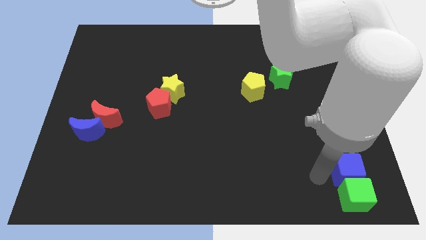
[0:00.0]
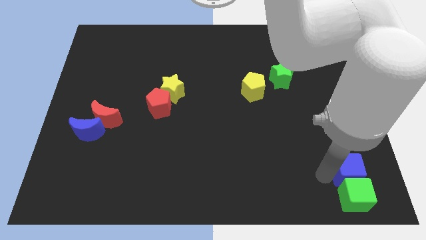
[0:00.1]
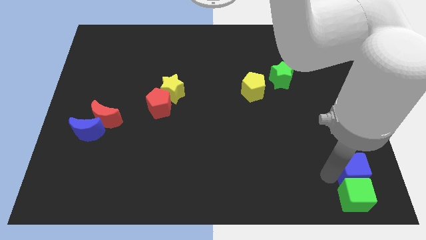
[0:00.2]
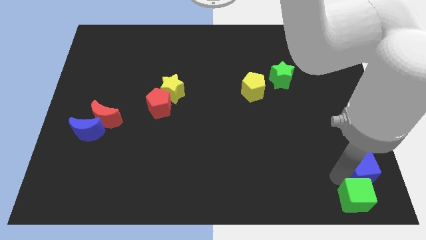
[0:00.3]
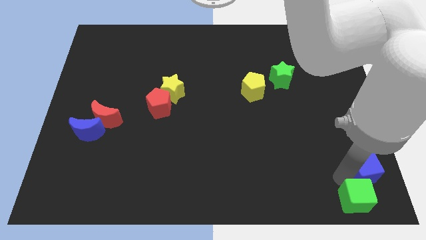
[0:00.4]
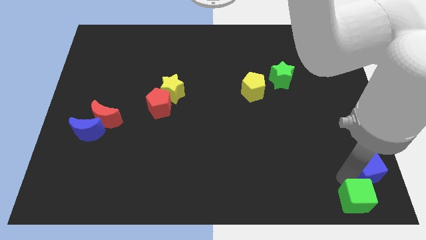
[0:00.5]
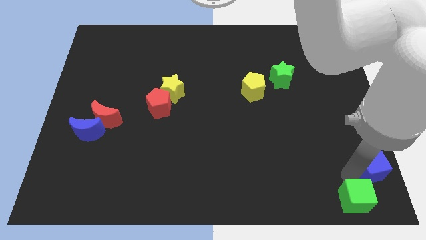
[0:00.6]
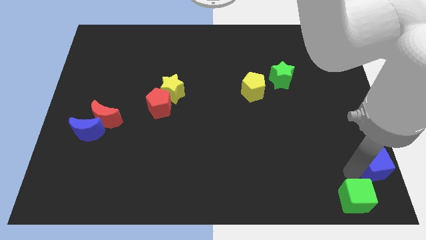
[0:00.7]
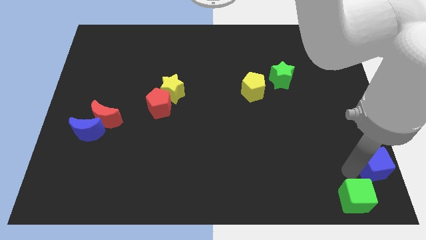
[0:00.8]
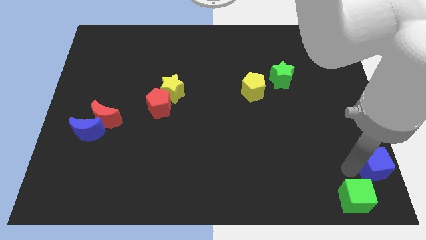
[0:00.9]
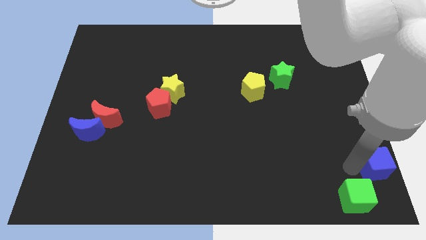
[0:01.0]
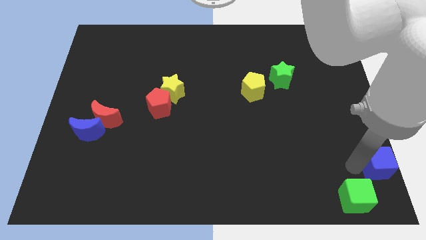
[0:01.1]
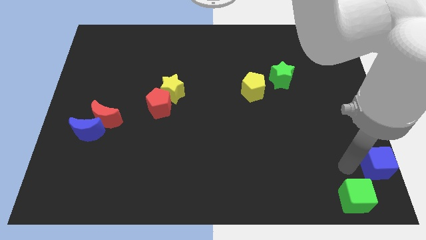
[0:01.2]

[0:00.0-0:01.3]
move blue cube to the right side of the board

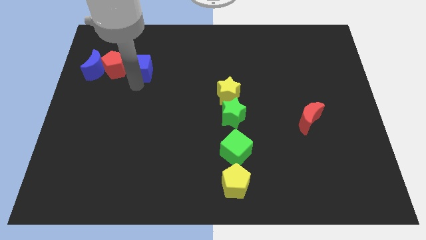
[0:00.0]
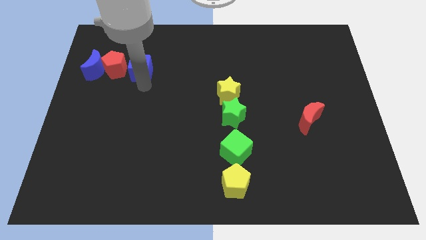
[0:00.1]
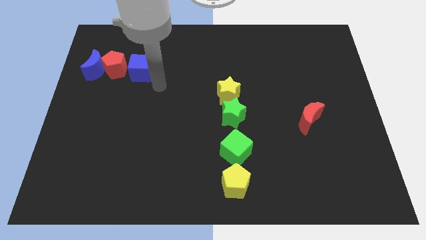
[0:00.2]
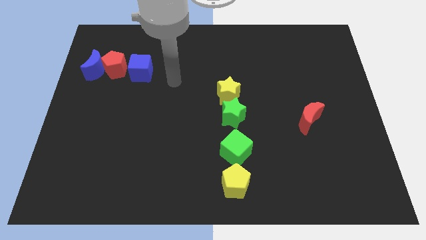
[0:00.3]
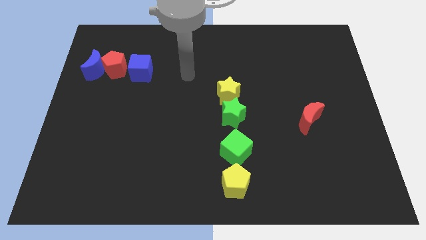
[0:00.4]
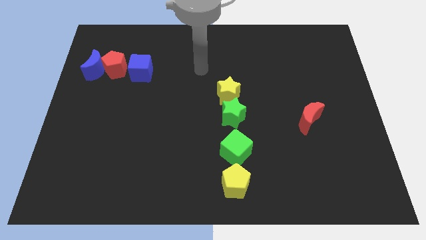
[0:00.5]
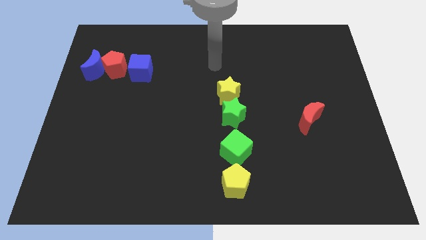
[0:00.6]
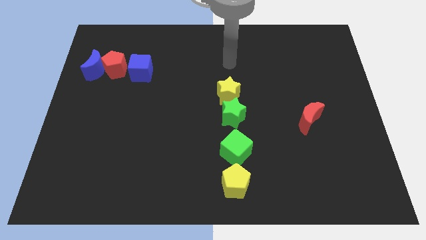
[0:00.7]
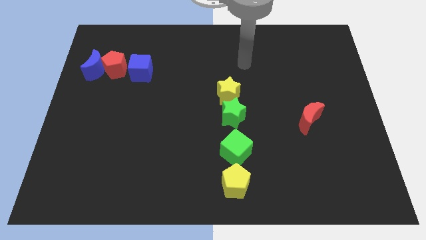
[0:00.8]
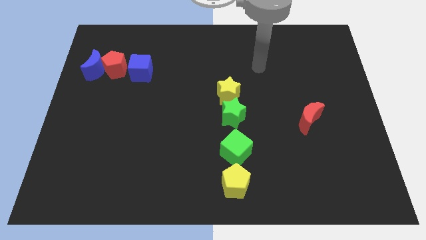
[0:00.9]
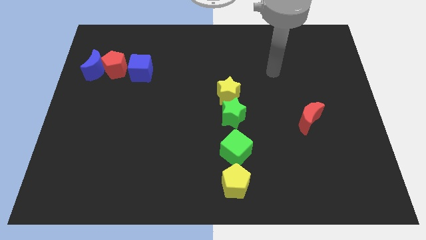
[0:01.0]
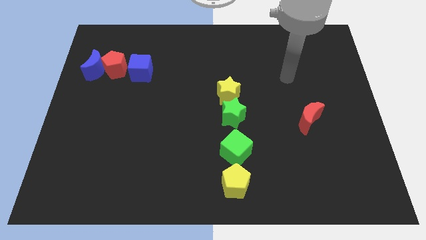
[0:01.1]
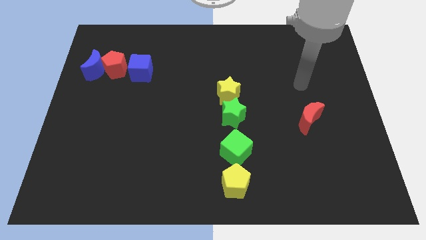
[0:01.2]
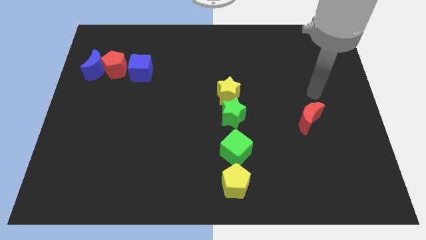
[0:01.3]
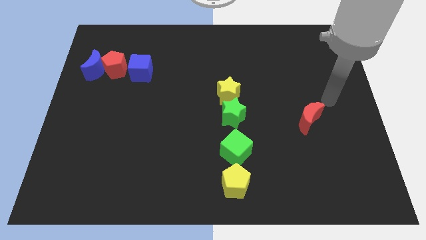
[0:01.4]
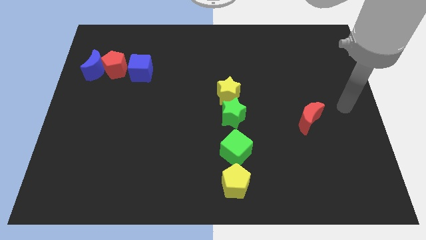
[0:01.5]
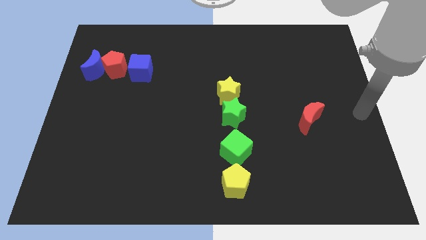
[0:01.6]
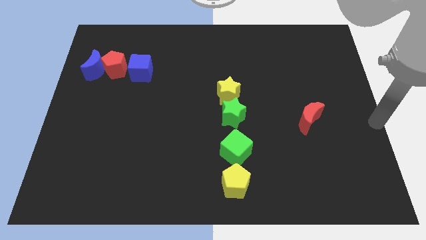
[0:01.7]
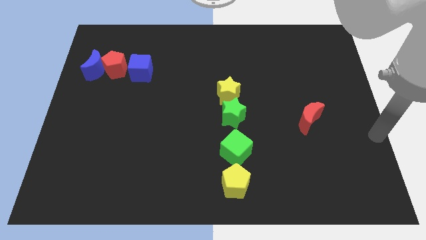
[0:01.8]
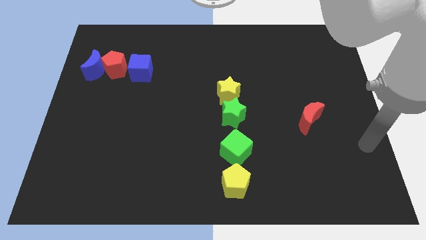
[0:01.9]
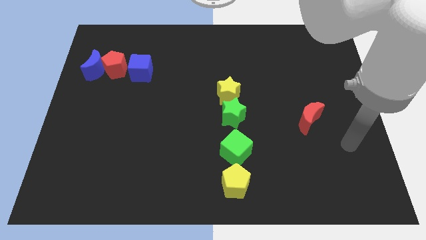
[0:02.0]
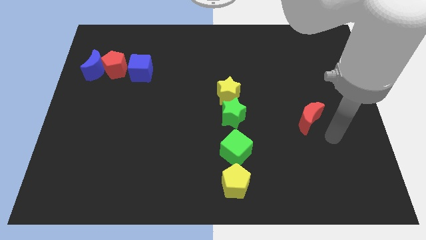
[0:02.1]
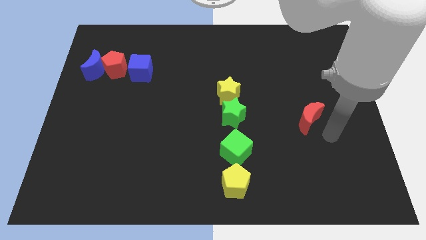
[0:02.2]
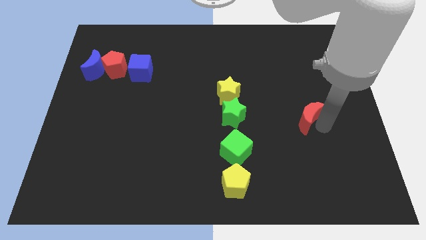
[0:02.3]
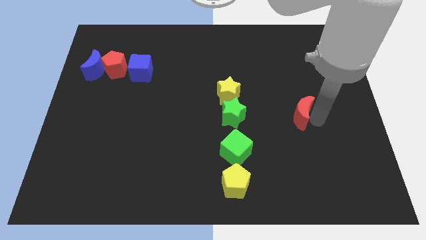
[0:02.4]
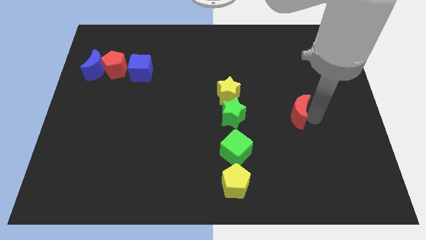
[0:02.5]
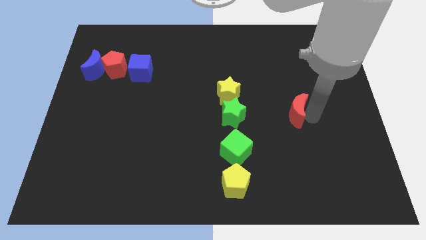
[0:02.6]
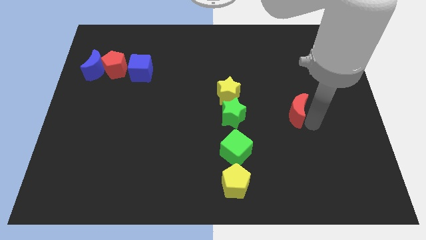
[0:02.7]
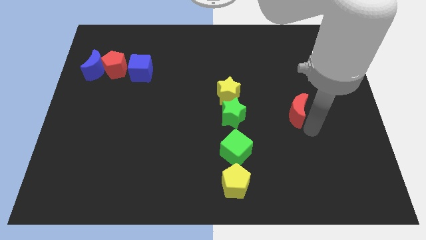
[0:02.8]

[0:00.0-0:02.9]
slide the red crescent to the right of the green star

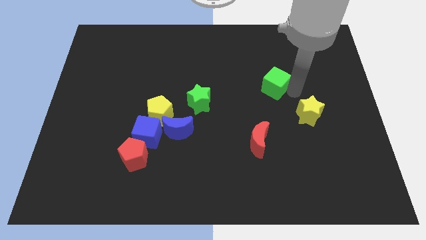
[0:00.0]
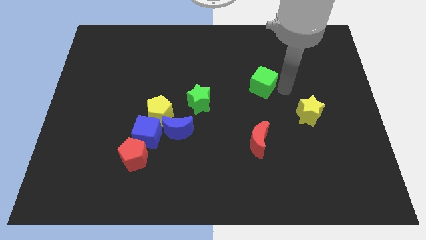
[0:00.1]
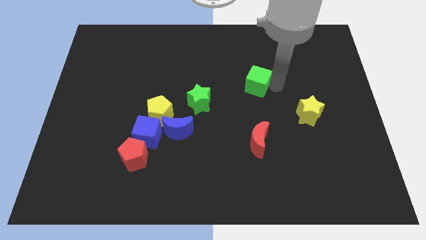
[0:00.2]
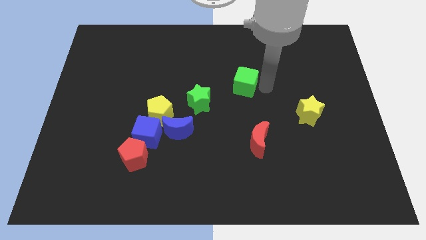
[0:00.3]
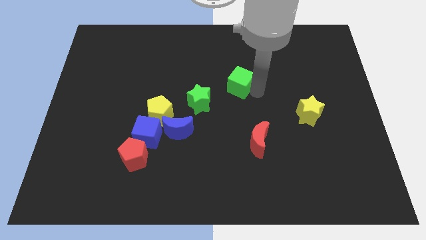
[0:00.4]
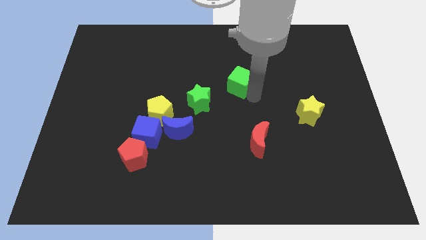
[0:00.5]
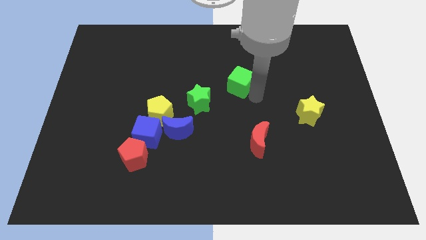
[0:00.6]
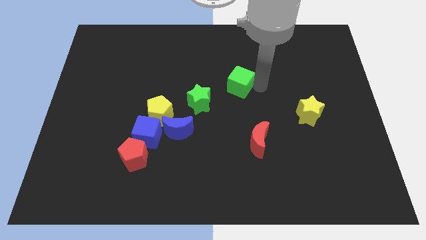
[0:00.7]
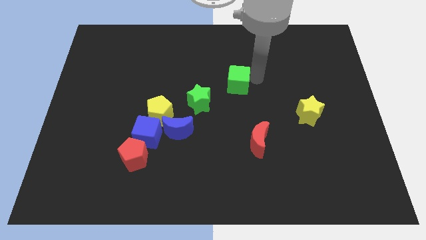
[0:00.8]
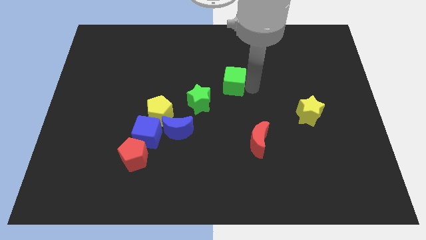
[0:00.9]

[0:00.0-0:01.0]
push the green cube to the center

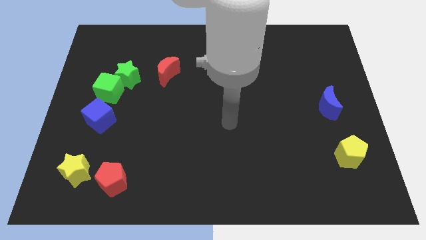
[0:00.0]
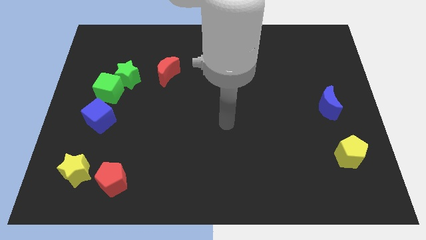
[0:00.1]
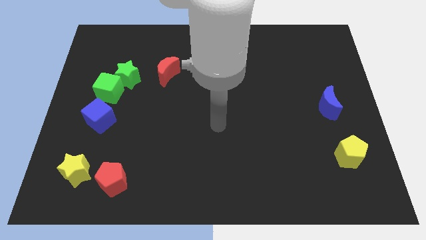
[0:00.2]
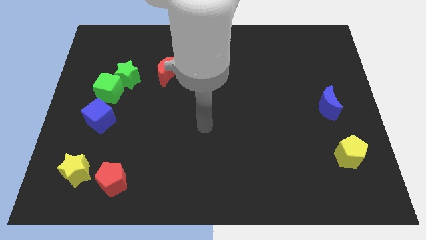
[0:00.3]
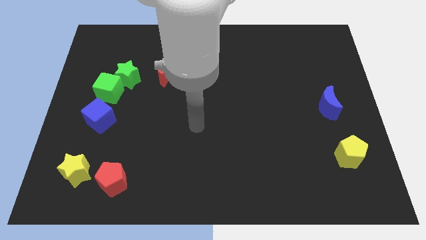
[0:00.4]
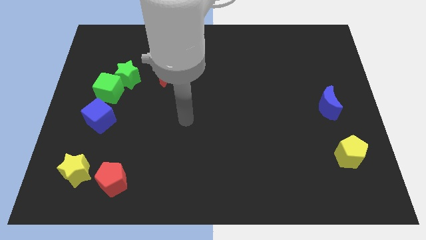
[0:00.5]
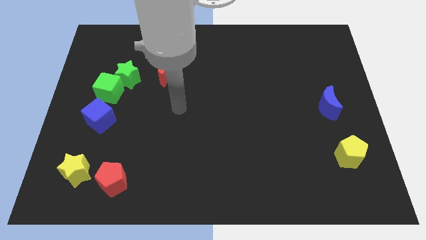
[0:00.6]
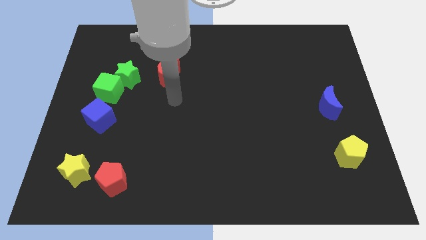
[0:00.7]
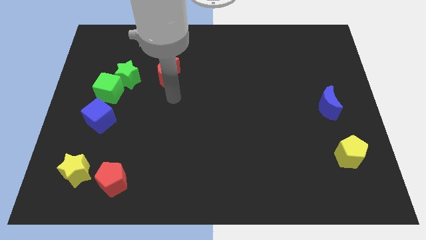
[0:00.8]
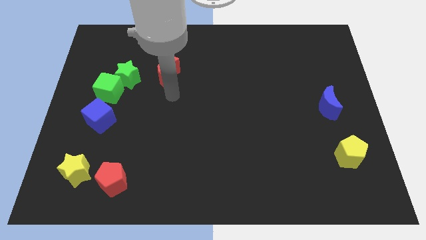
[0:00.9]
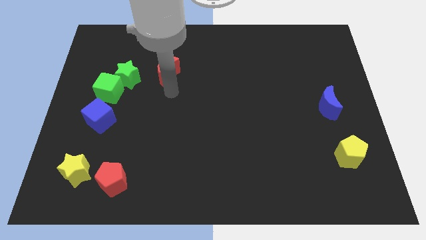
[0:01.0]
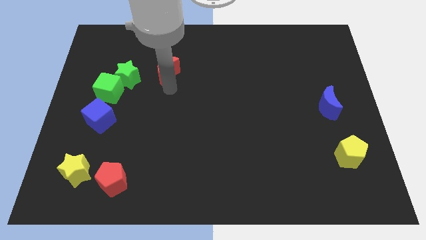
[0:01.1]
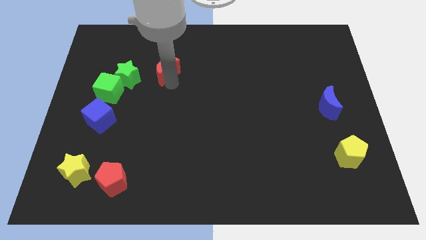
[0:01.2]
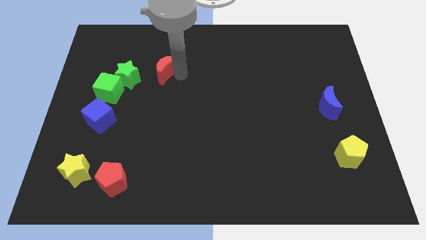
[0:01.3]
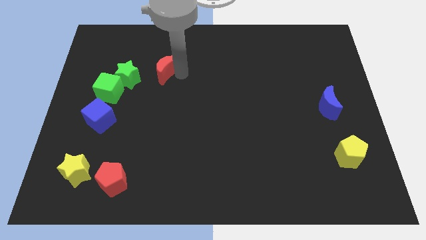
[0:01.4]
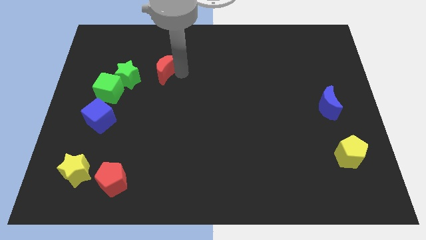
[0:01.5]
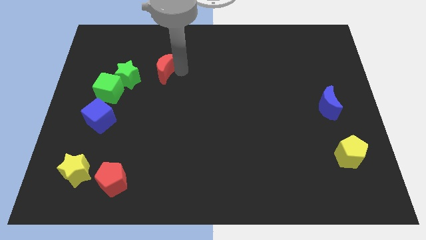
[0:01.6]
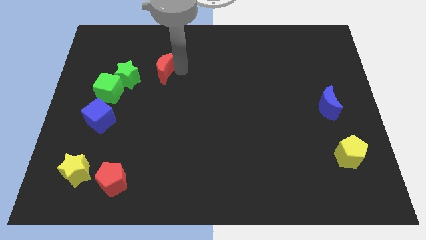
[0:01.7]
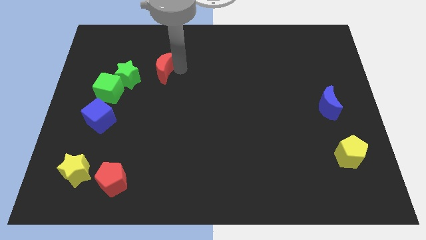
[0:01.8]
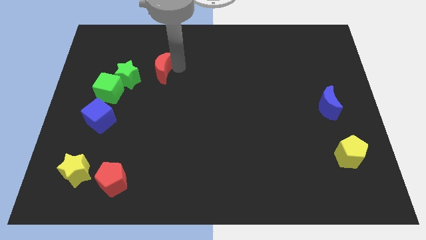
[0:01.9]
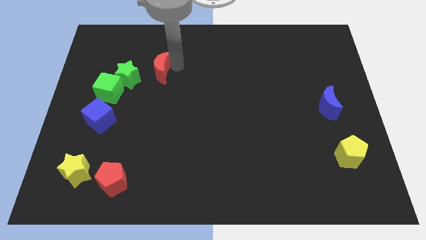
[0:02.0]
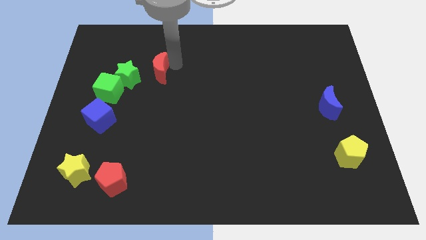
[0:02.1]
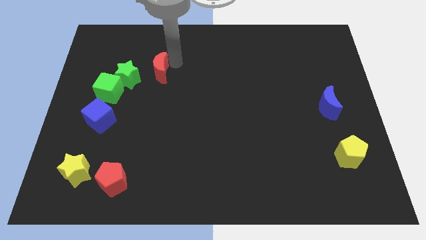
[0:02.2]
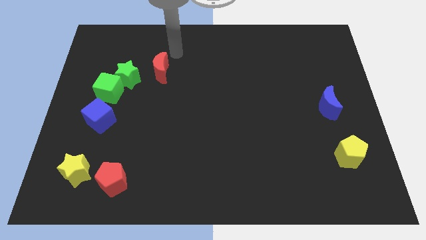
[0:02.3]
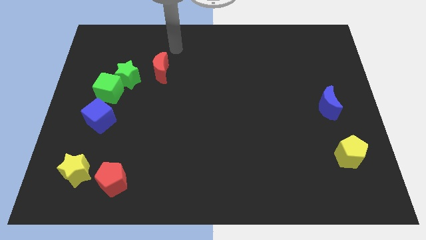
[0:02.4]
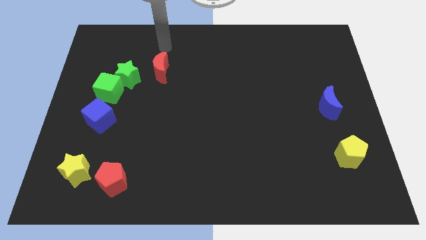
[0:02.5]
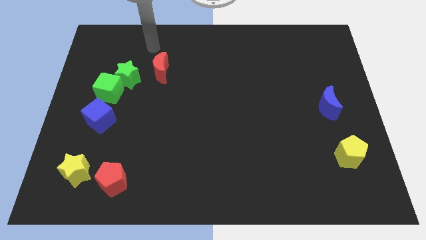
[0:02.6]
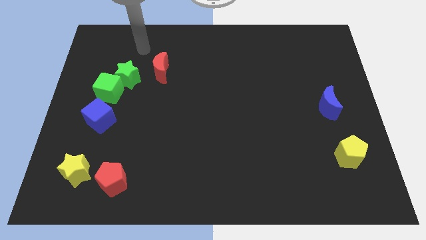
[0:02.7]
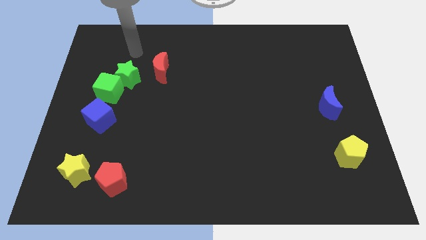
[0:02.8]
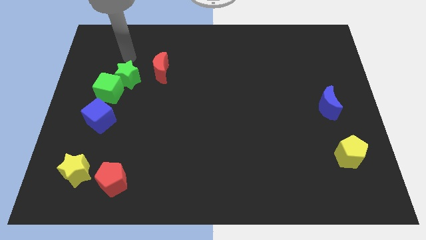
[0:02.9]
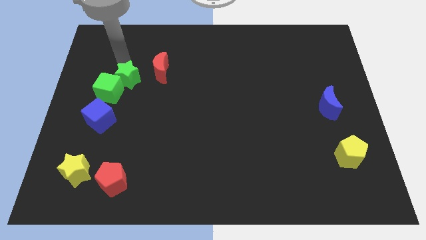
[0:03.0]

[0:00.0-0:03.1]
slide red moon slightly to the left

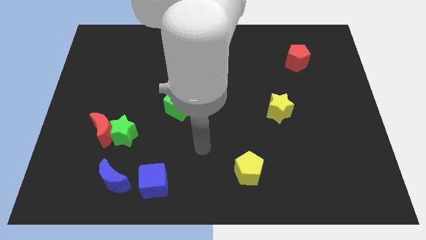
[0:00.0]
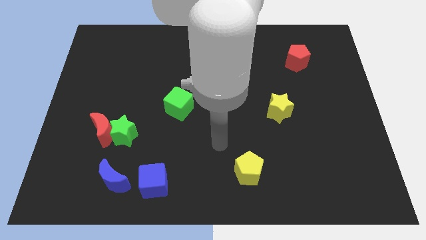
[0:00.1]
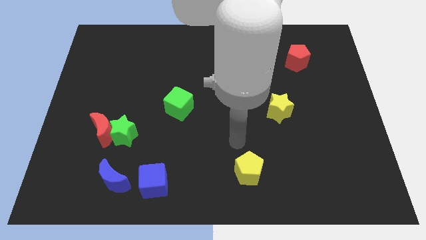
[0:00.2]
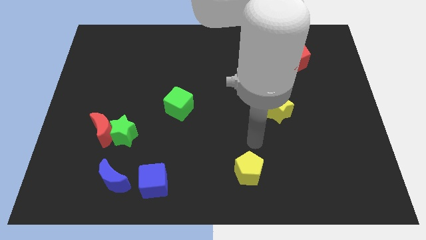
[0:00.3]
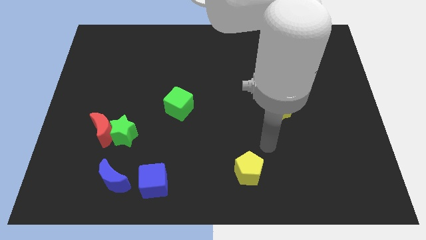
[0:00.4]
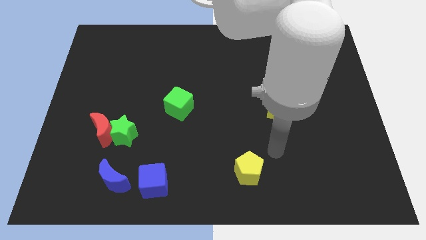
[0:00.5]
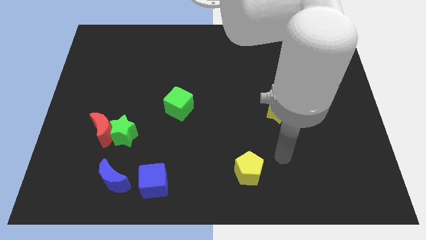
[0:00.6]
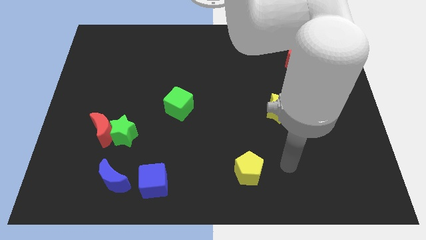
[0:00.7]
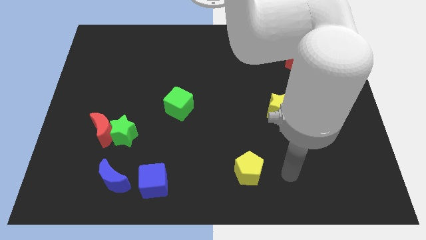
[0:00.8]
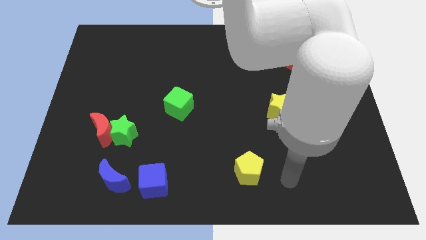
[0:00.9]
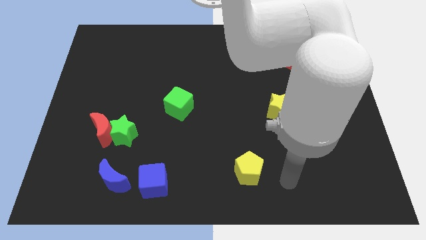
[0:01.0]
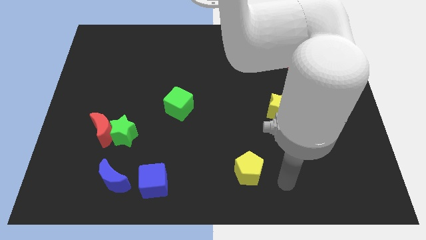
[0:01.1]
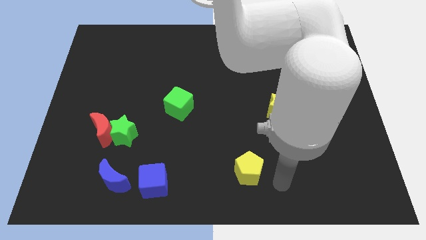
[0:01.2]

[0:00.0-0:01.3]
move your arm to the right of the yellow pentagon
